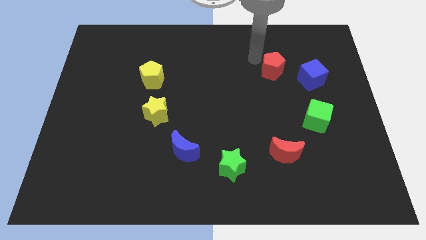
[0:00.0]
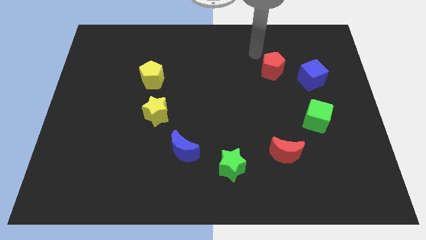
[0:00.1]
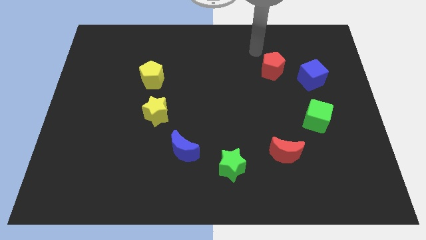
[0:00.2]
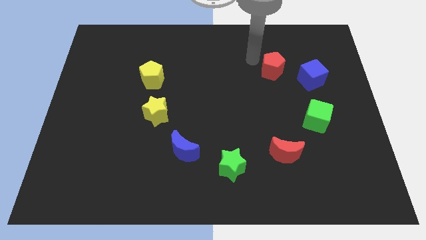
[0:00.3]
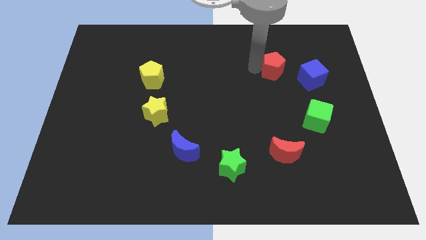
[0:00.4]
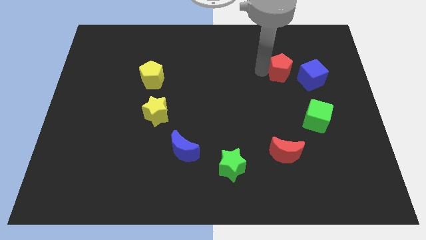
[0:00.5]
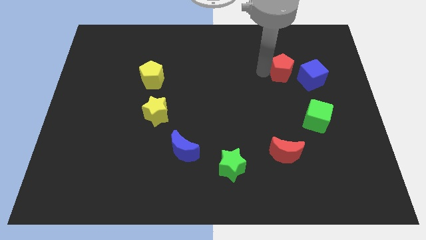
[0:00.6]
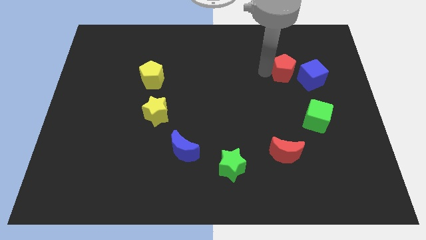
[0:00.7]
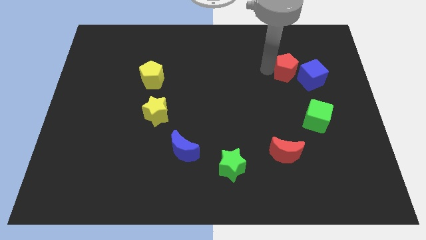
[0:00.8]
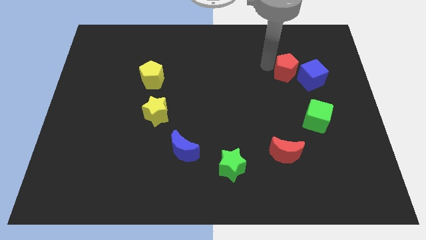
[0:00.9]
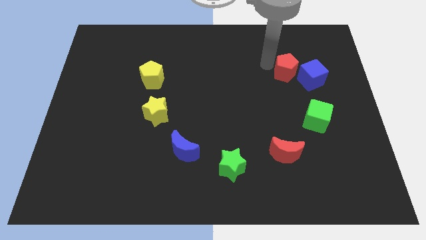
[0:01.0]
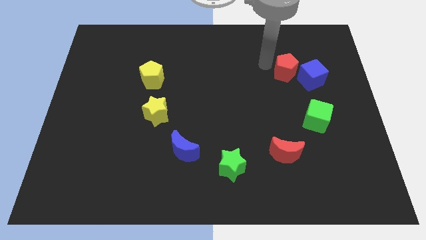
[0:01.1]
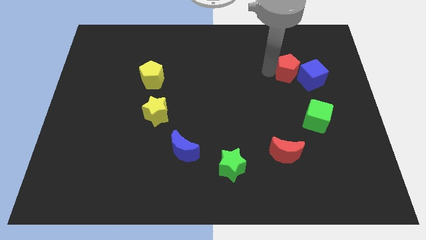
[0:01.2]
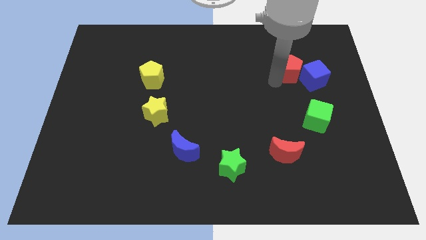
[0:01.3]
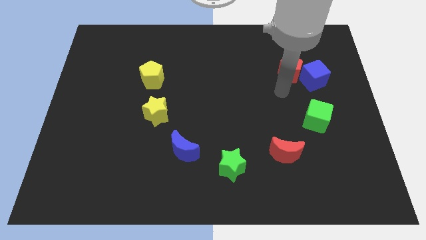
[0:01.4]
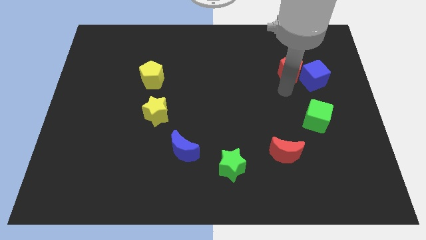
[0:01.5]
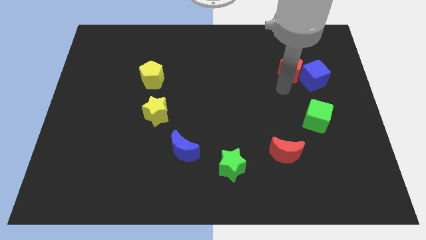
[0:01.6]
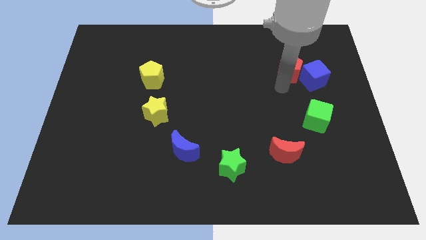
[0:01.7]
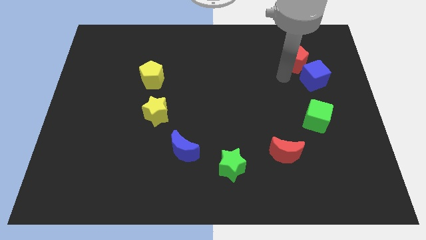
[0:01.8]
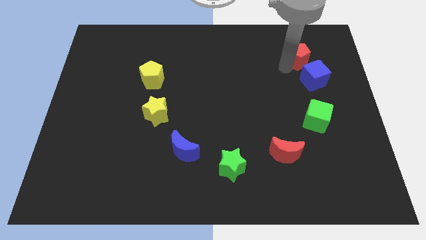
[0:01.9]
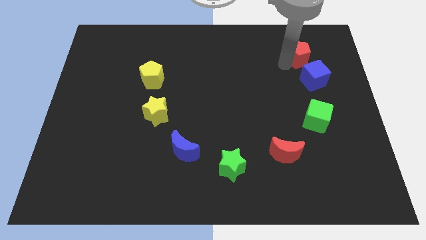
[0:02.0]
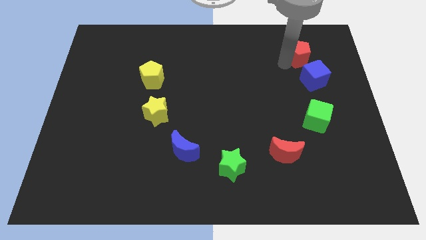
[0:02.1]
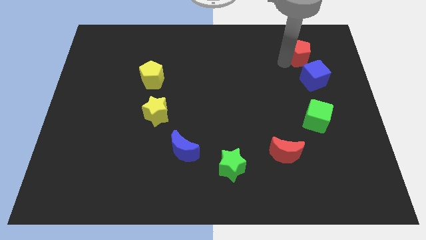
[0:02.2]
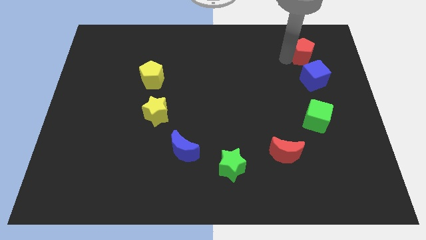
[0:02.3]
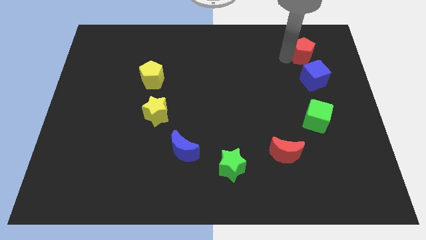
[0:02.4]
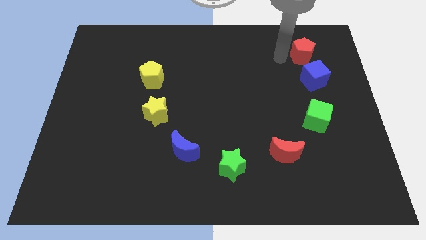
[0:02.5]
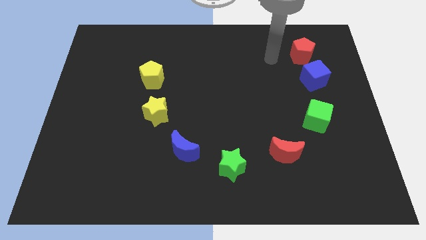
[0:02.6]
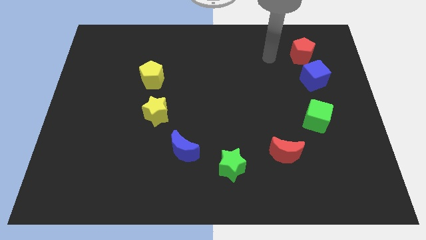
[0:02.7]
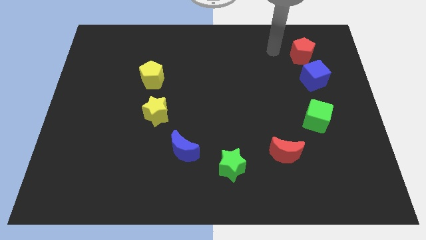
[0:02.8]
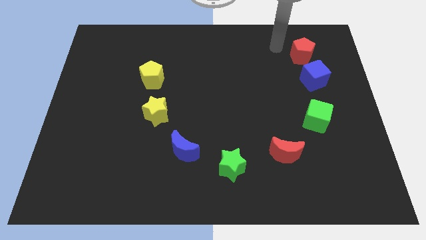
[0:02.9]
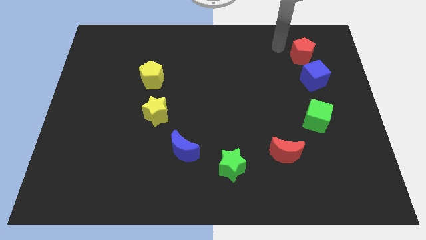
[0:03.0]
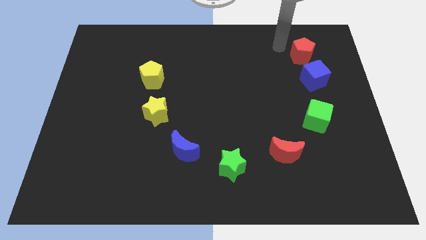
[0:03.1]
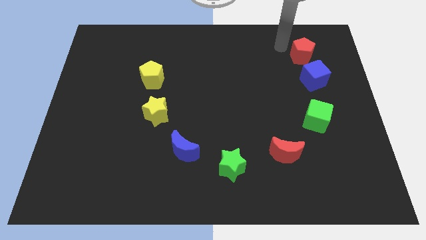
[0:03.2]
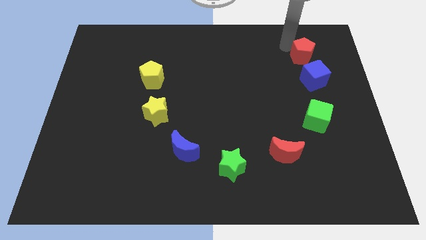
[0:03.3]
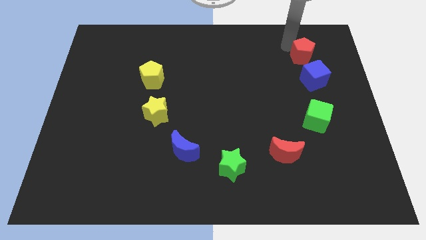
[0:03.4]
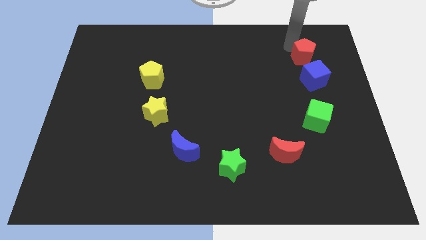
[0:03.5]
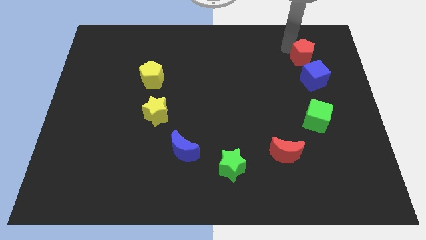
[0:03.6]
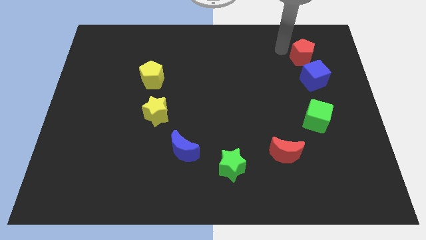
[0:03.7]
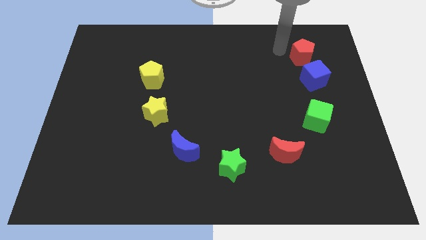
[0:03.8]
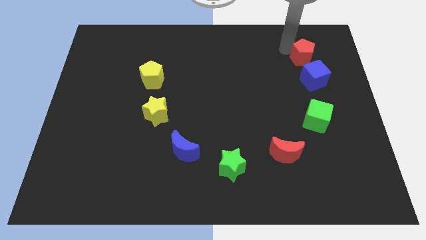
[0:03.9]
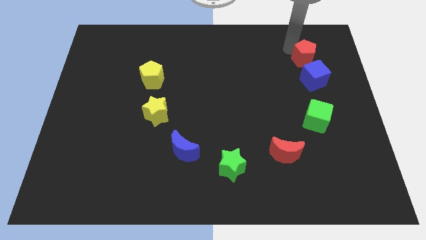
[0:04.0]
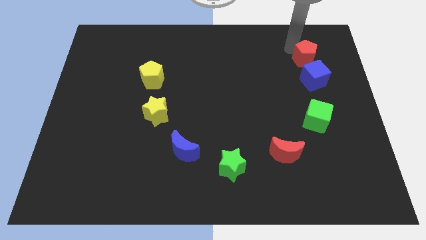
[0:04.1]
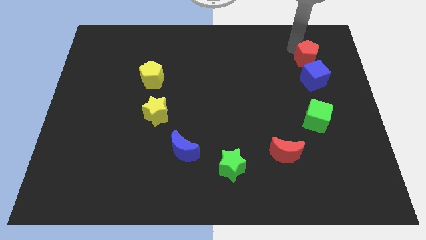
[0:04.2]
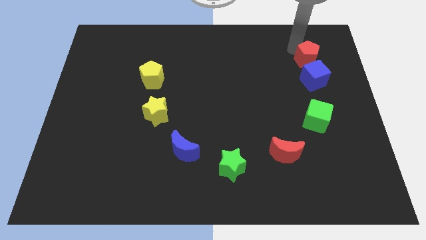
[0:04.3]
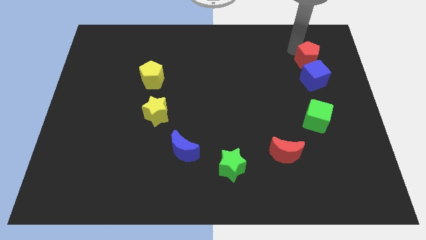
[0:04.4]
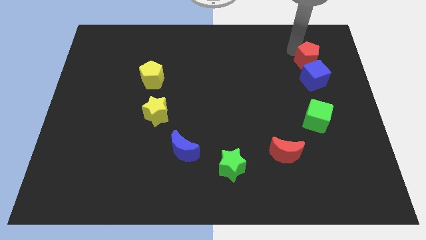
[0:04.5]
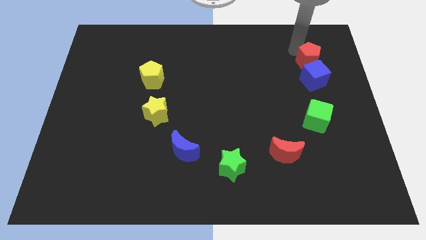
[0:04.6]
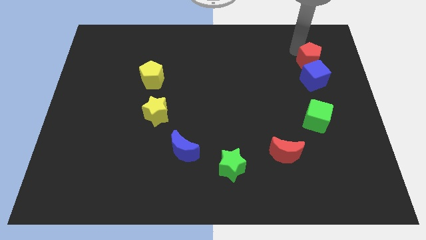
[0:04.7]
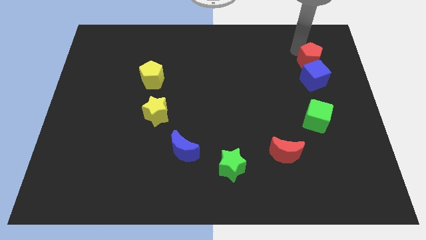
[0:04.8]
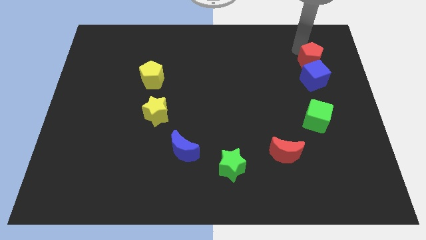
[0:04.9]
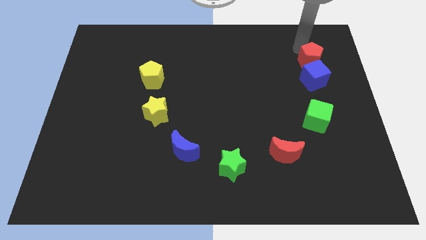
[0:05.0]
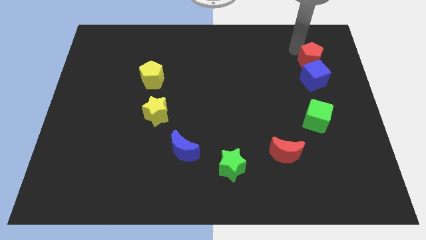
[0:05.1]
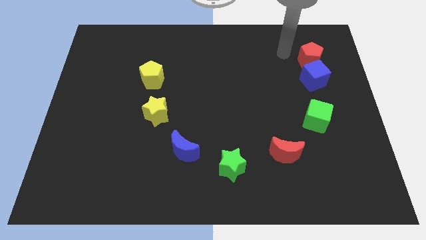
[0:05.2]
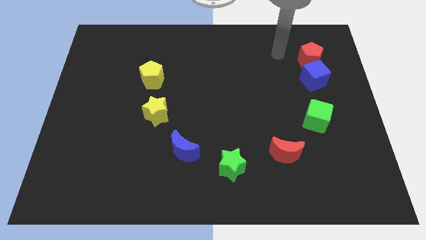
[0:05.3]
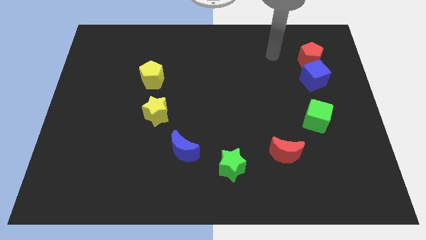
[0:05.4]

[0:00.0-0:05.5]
push the red pentagon to the top side of the blue cube

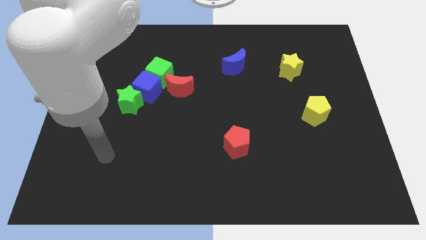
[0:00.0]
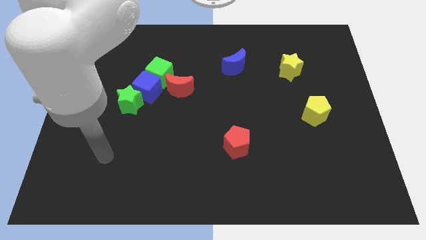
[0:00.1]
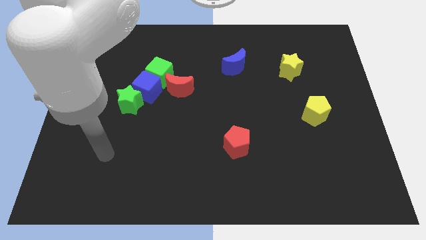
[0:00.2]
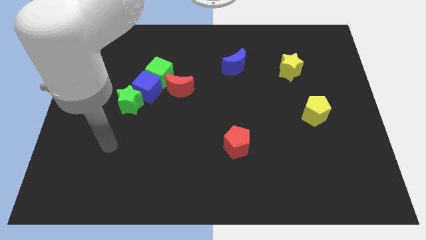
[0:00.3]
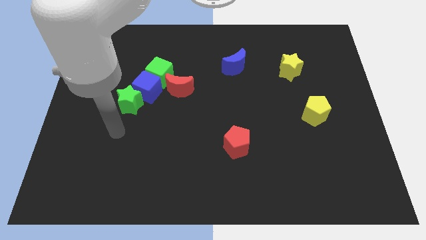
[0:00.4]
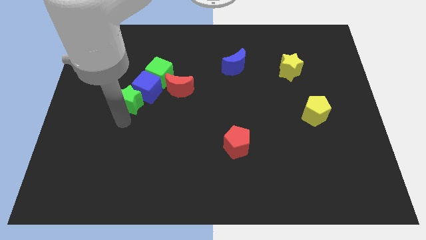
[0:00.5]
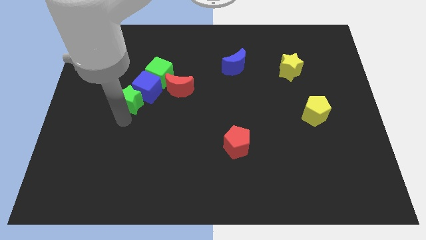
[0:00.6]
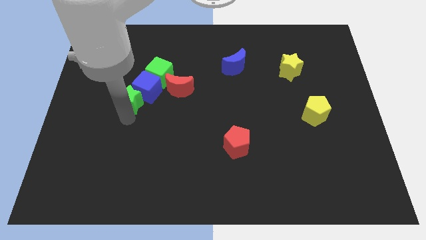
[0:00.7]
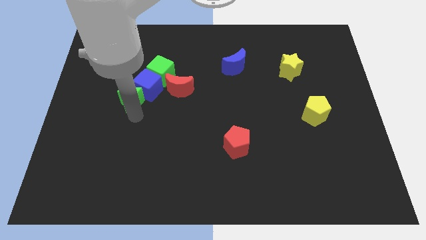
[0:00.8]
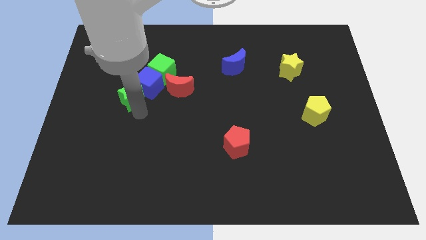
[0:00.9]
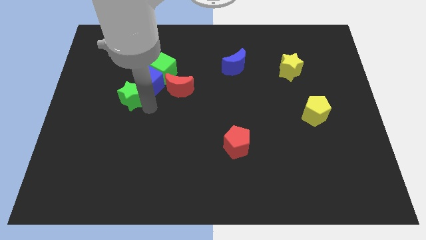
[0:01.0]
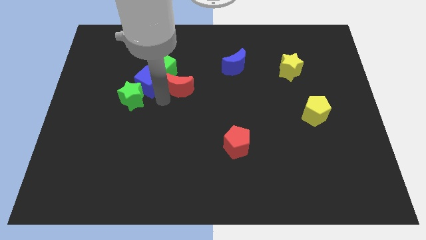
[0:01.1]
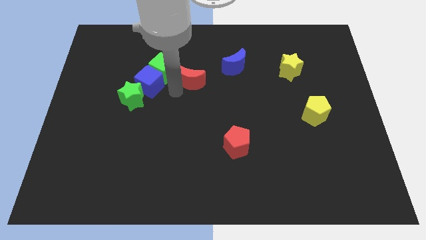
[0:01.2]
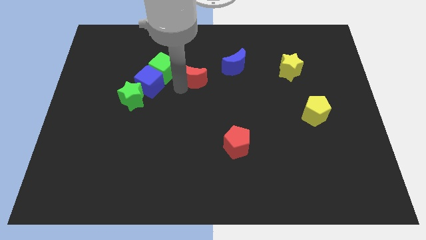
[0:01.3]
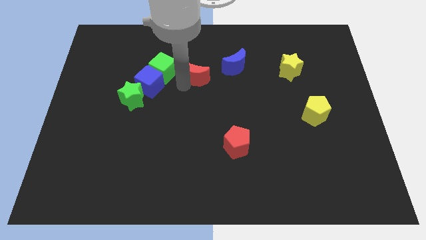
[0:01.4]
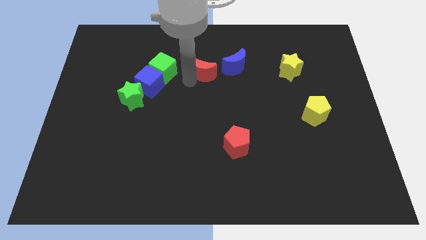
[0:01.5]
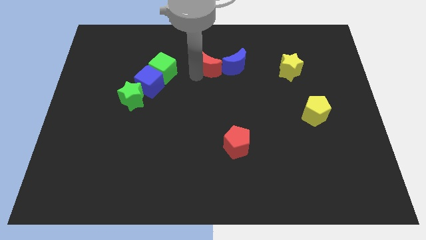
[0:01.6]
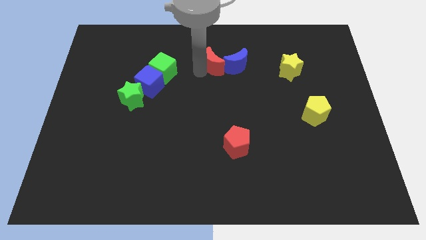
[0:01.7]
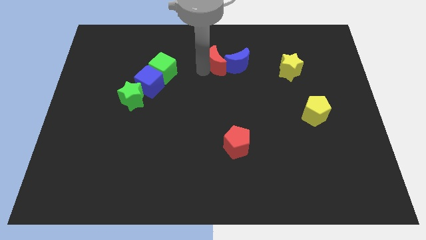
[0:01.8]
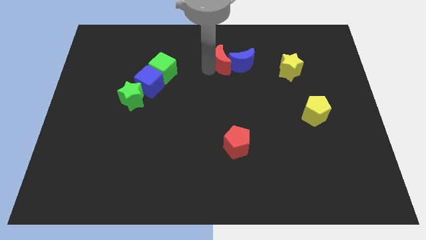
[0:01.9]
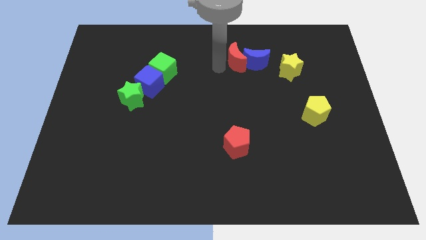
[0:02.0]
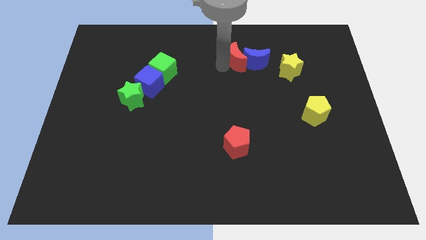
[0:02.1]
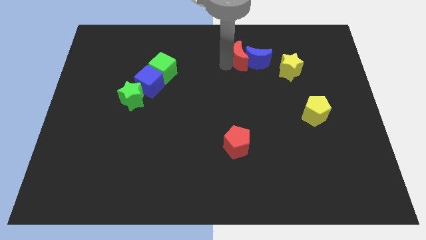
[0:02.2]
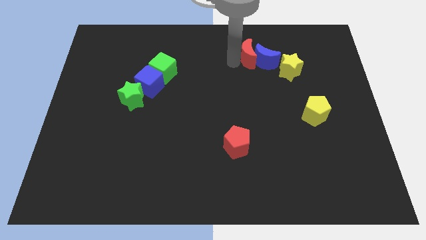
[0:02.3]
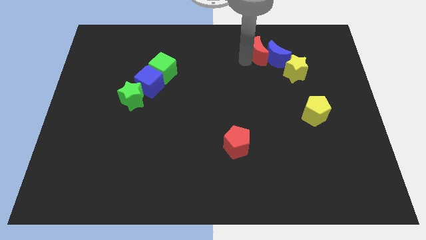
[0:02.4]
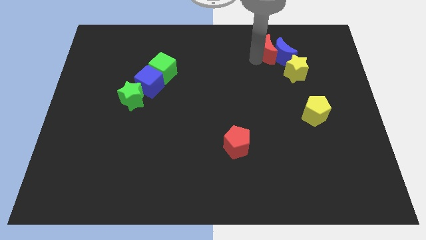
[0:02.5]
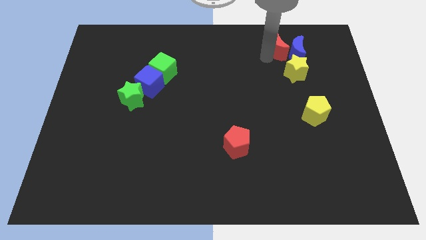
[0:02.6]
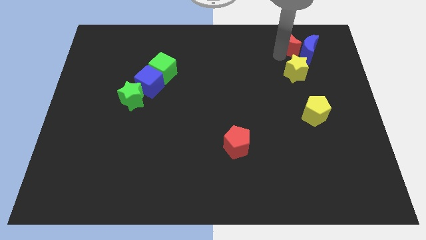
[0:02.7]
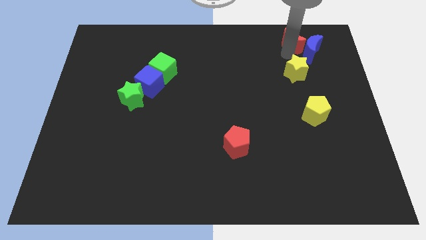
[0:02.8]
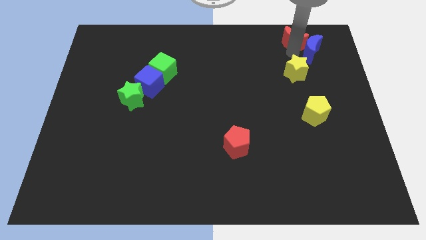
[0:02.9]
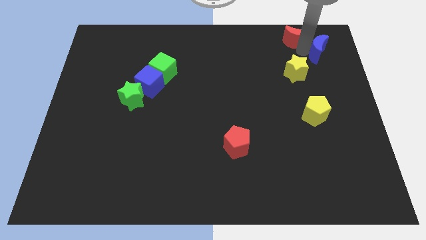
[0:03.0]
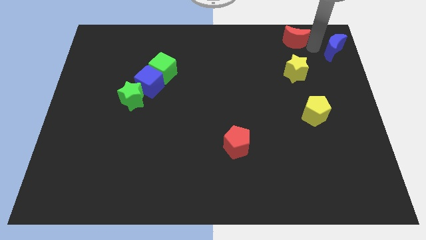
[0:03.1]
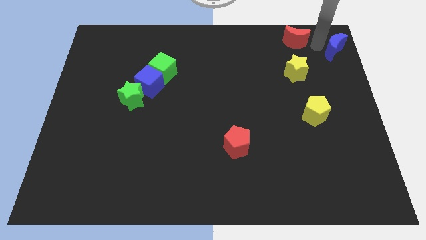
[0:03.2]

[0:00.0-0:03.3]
put the red moon above the yellow star
